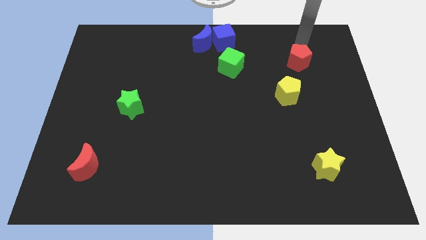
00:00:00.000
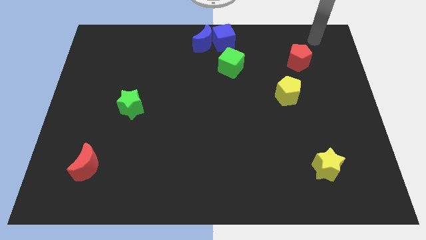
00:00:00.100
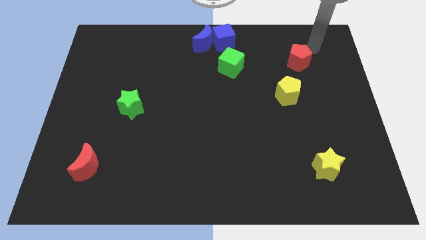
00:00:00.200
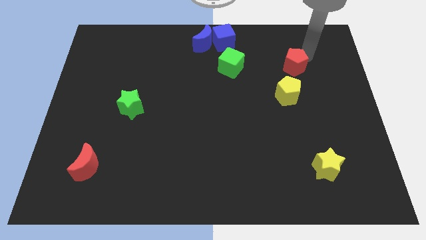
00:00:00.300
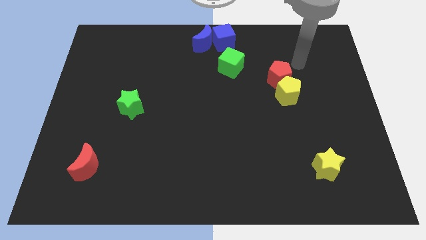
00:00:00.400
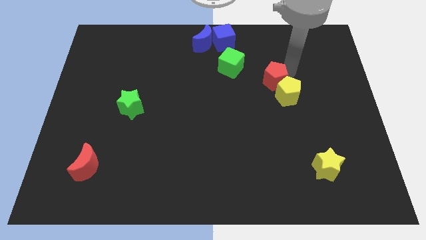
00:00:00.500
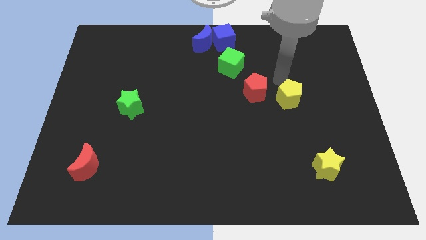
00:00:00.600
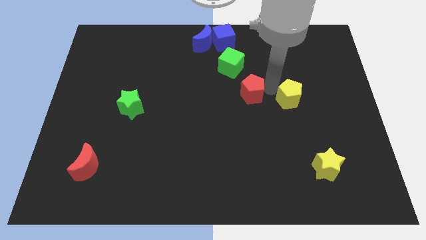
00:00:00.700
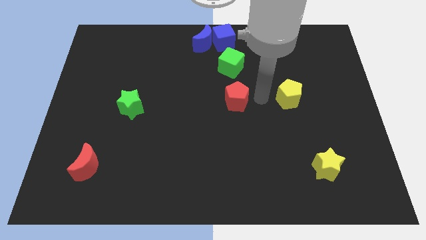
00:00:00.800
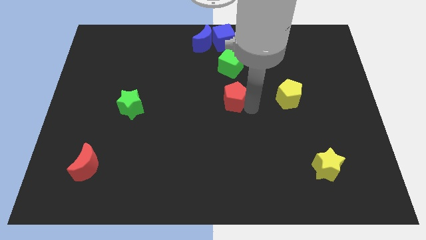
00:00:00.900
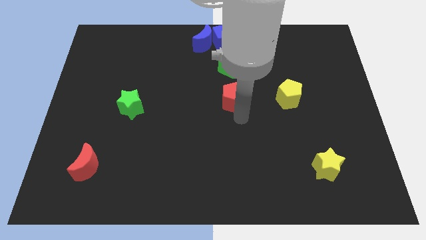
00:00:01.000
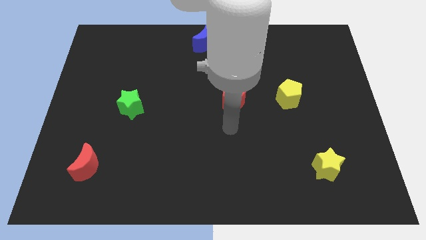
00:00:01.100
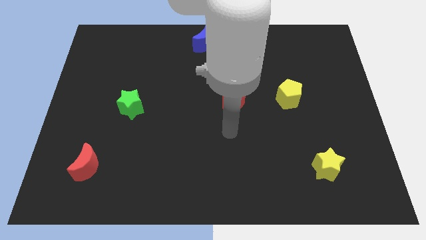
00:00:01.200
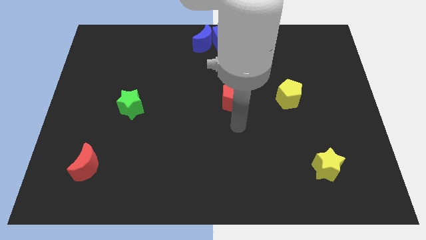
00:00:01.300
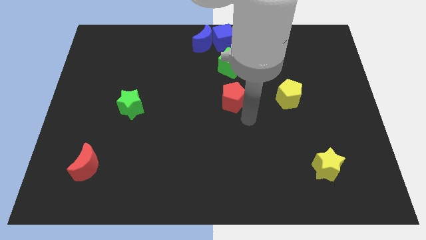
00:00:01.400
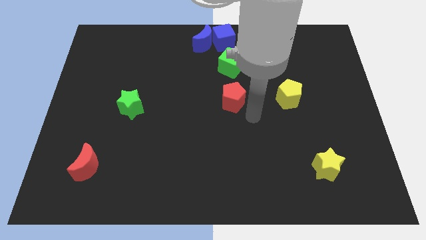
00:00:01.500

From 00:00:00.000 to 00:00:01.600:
drag the red pentagon slightly downwards

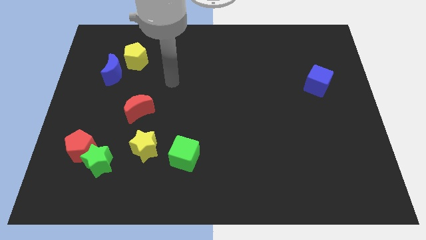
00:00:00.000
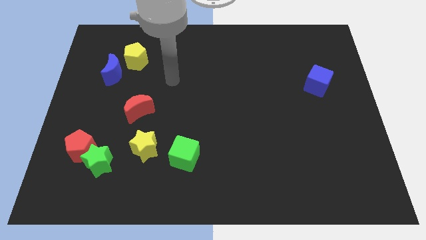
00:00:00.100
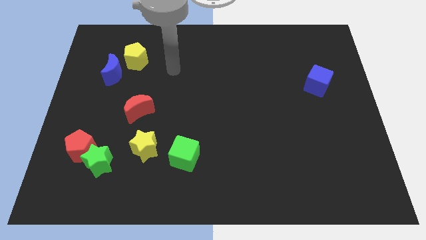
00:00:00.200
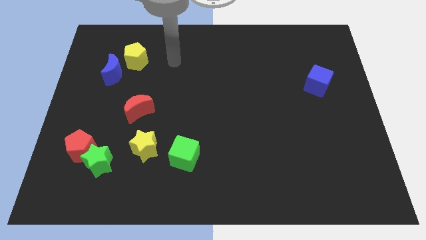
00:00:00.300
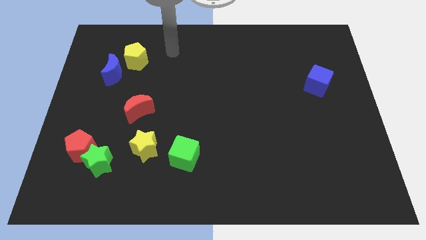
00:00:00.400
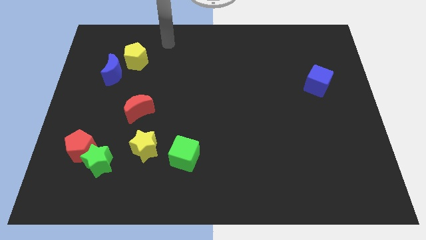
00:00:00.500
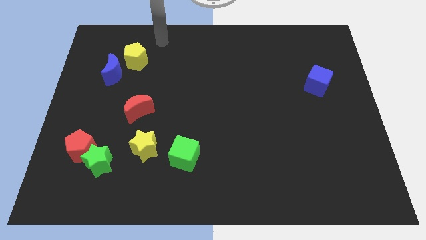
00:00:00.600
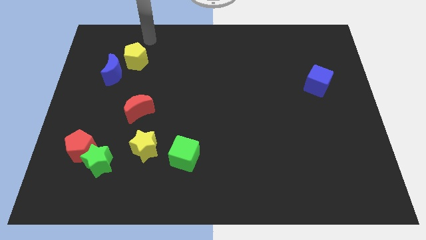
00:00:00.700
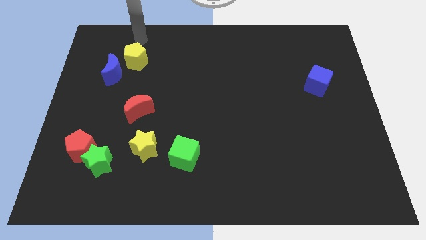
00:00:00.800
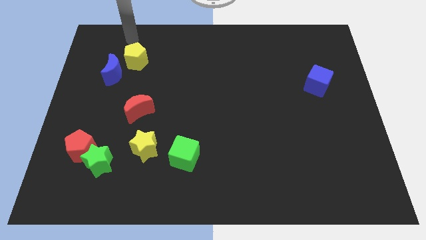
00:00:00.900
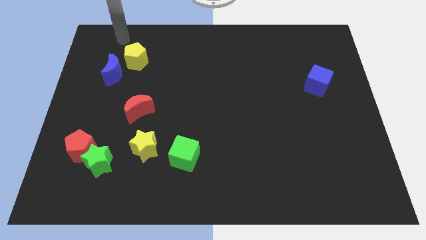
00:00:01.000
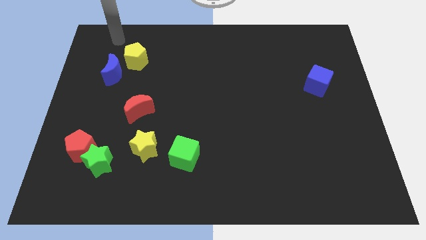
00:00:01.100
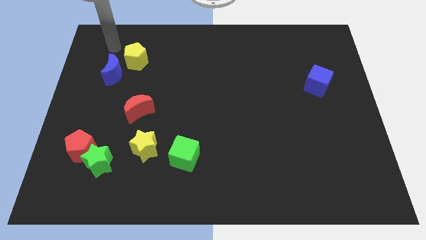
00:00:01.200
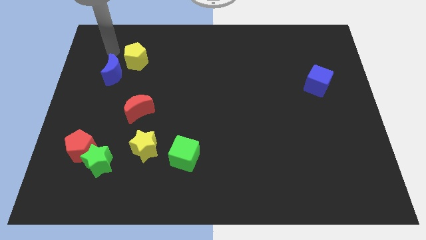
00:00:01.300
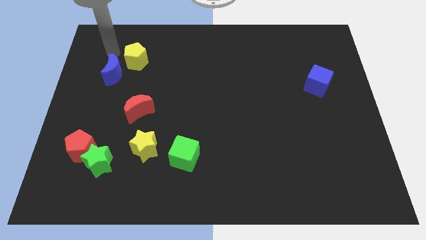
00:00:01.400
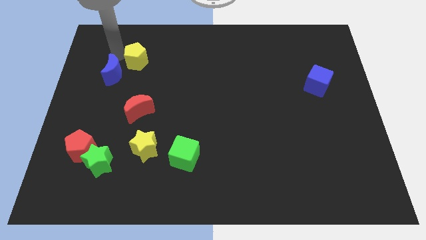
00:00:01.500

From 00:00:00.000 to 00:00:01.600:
place your arm to the left of yellow pentagon

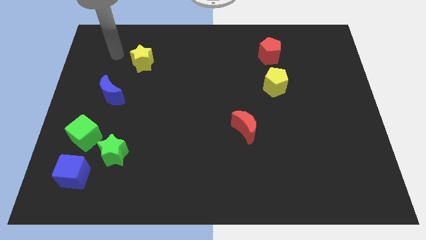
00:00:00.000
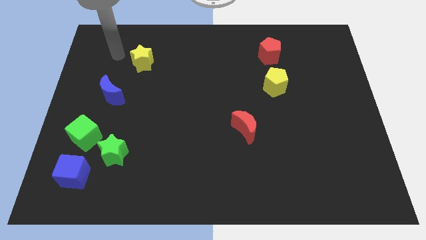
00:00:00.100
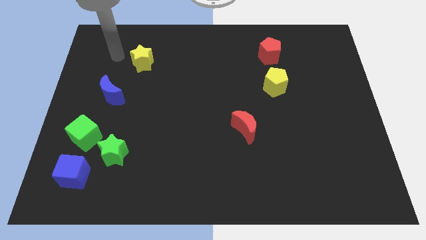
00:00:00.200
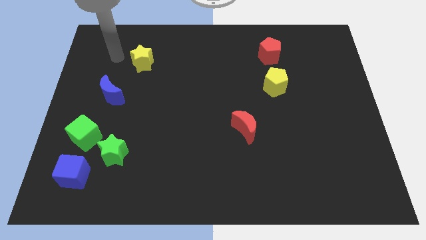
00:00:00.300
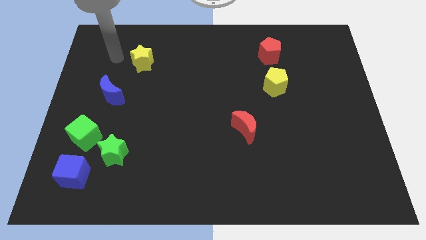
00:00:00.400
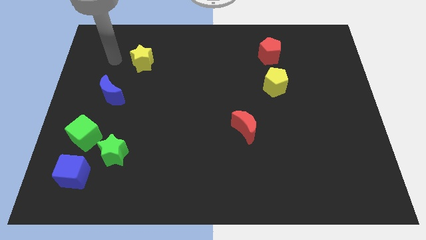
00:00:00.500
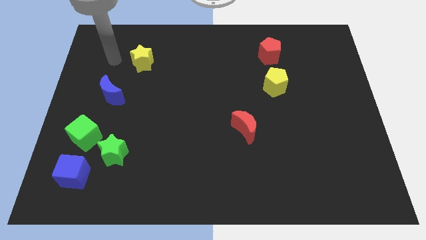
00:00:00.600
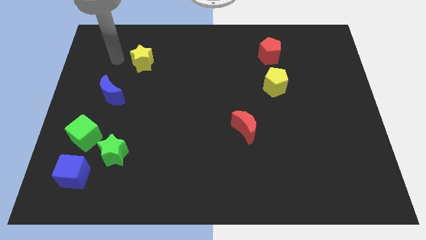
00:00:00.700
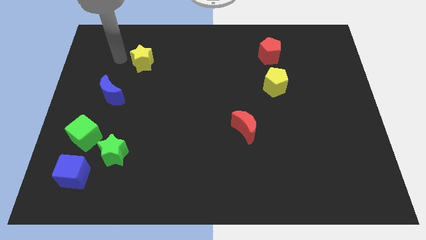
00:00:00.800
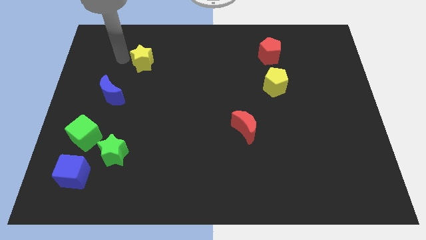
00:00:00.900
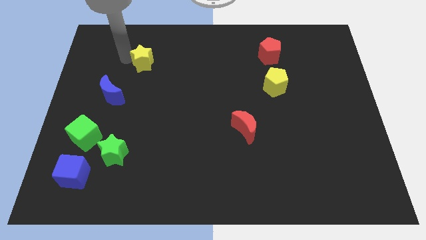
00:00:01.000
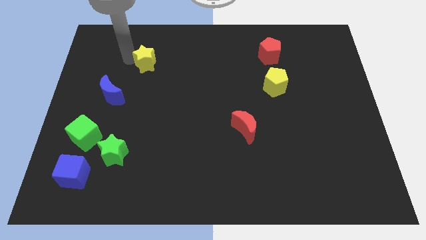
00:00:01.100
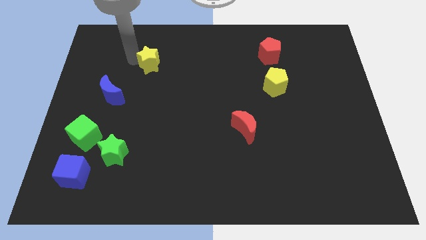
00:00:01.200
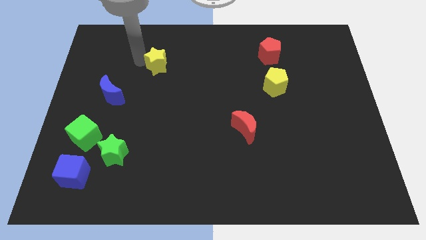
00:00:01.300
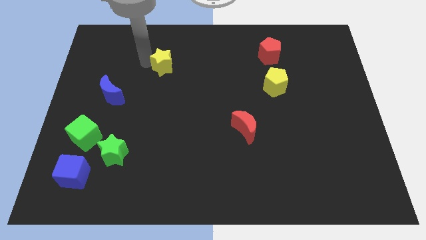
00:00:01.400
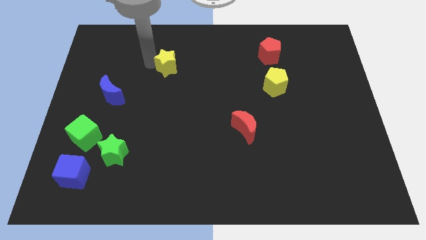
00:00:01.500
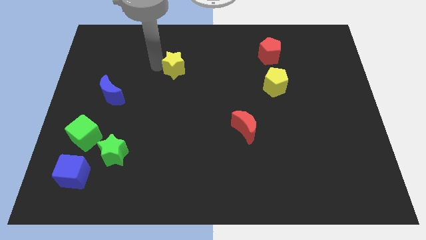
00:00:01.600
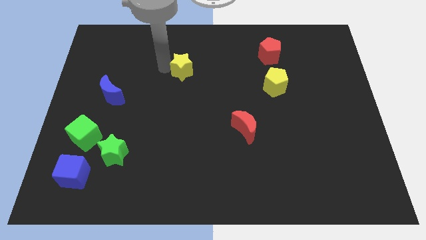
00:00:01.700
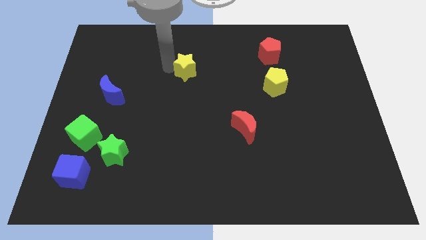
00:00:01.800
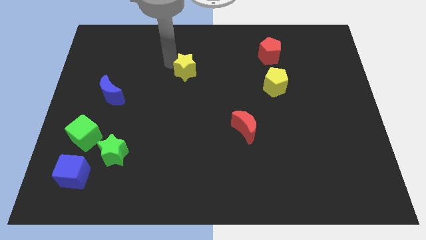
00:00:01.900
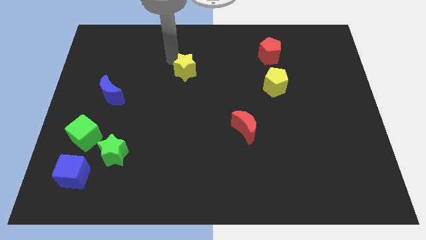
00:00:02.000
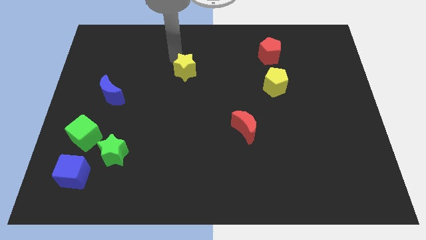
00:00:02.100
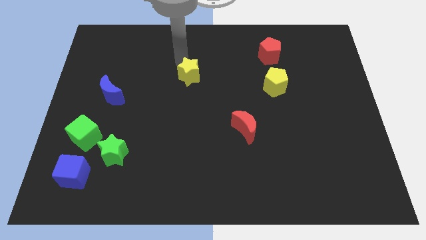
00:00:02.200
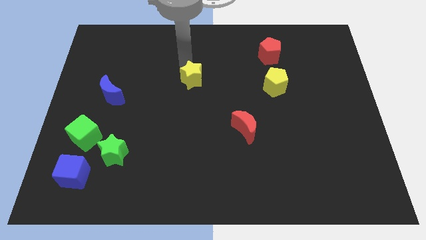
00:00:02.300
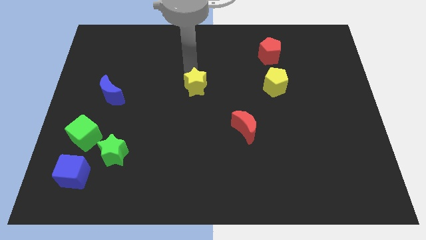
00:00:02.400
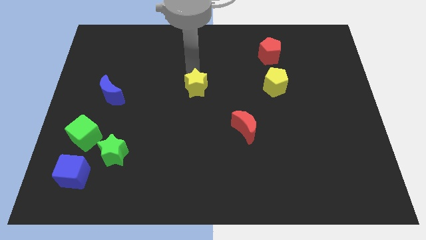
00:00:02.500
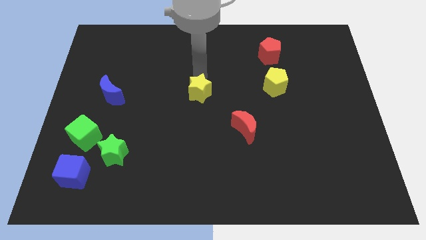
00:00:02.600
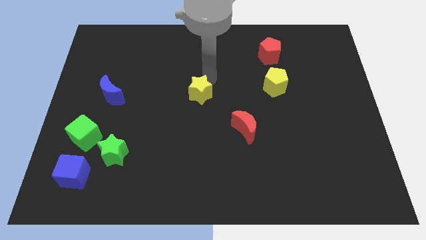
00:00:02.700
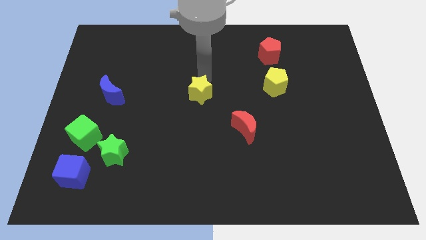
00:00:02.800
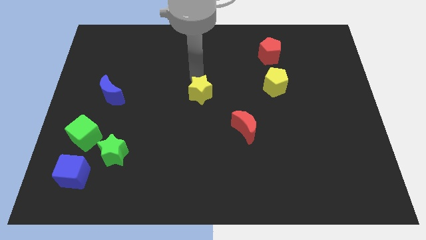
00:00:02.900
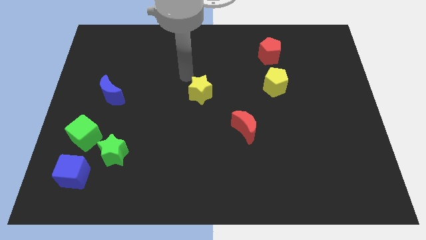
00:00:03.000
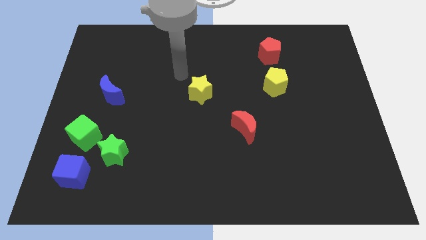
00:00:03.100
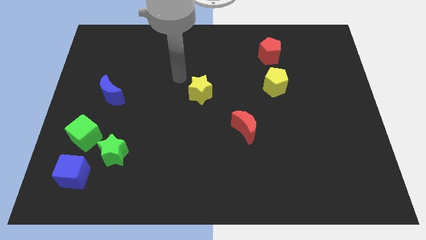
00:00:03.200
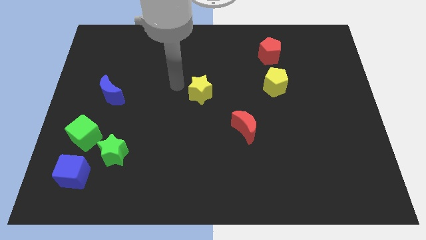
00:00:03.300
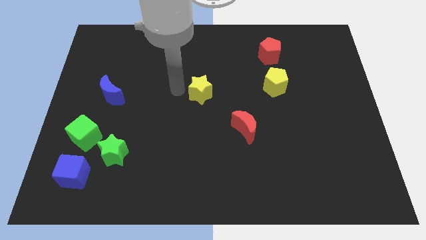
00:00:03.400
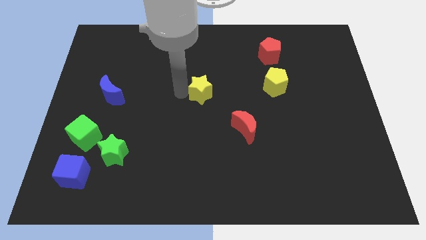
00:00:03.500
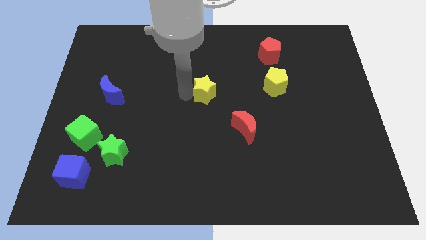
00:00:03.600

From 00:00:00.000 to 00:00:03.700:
push the yellow star towards the center of the board

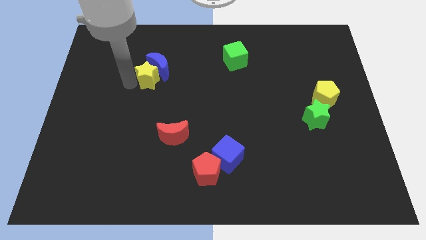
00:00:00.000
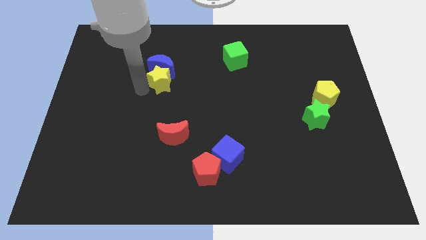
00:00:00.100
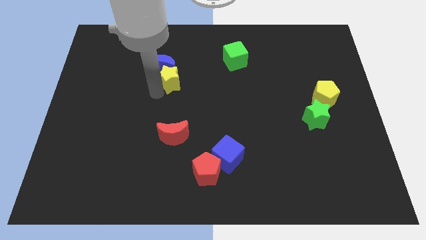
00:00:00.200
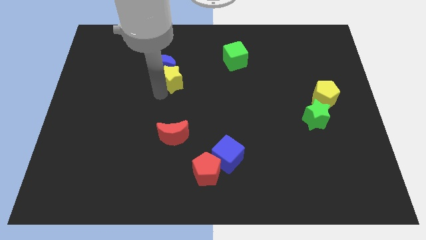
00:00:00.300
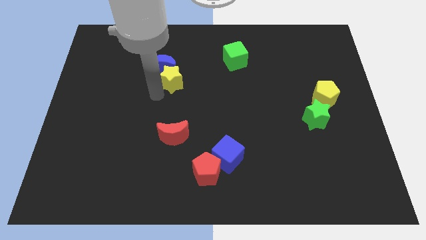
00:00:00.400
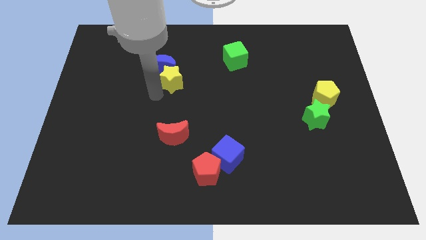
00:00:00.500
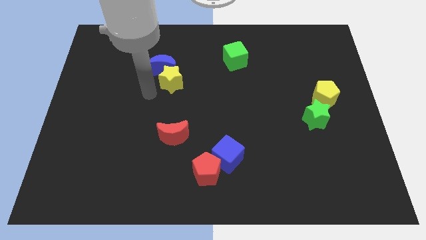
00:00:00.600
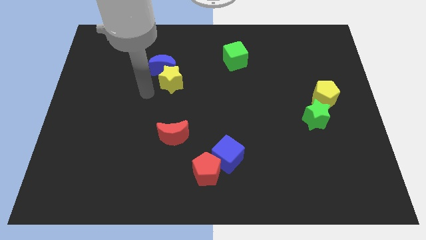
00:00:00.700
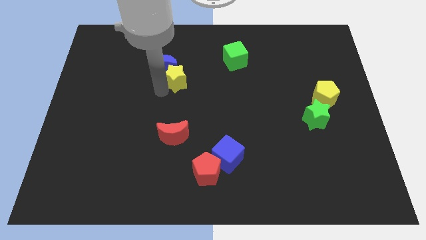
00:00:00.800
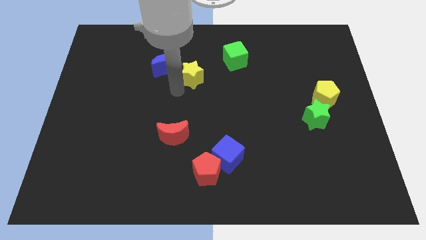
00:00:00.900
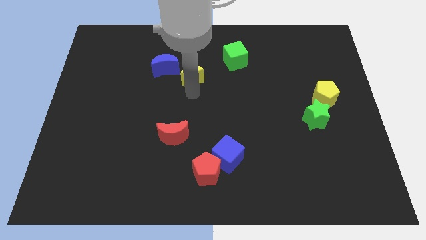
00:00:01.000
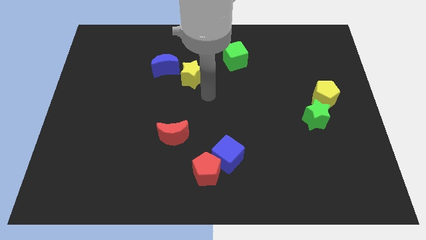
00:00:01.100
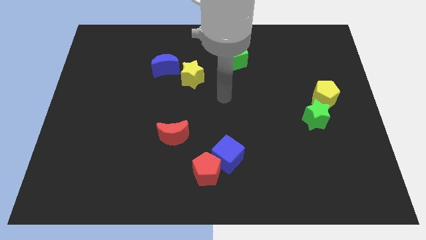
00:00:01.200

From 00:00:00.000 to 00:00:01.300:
push the yellow star into the blue moon

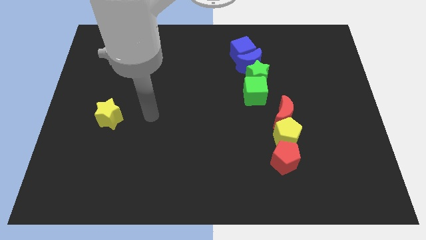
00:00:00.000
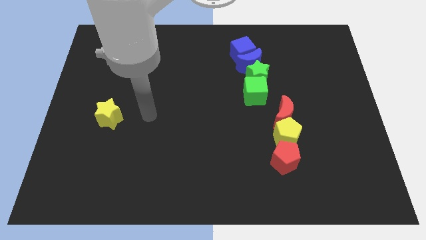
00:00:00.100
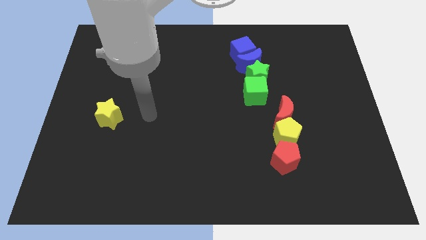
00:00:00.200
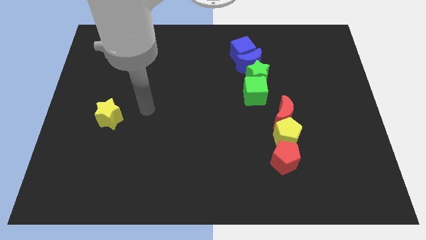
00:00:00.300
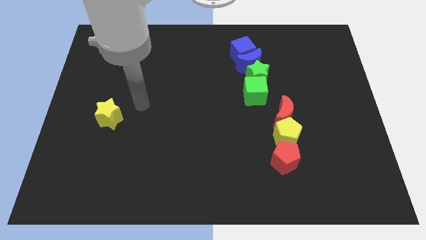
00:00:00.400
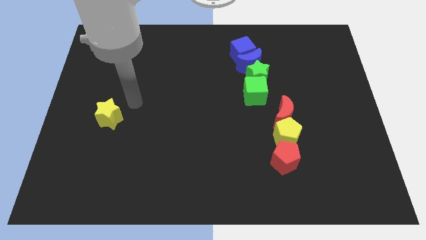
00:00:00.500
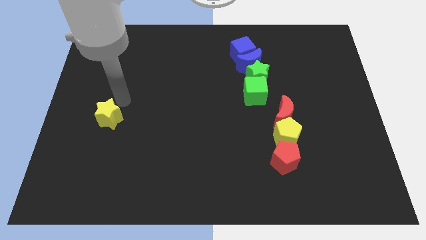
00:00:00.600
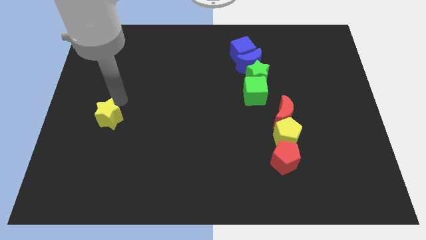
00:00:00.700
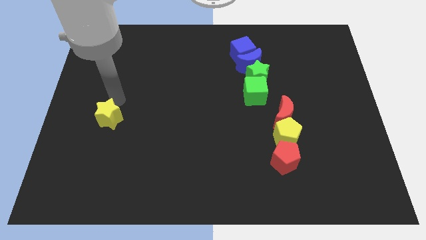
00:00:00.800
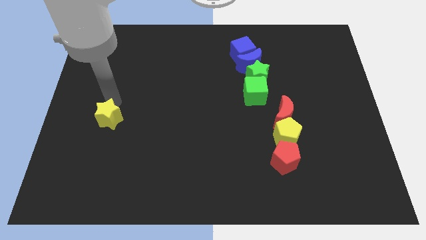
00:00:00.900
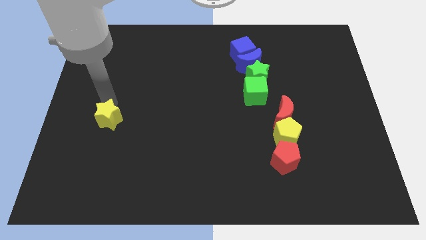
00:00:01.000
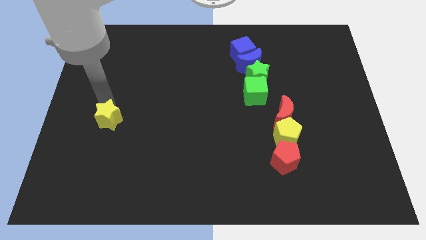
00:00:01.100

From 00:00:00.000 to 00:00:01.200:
place the arm above the yellow star
